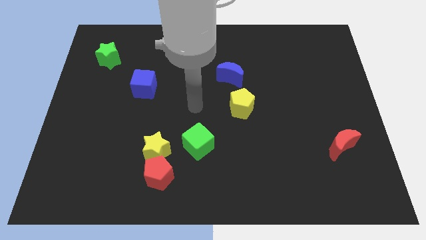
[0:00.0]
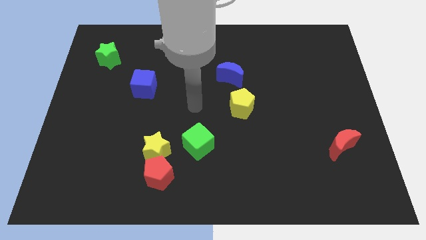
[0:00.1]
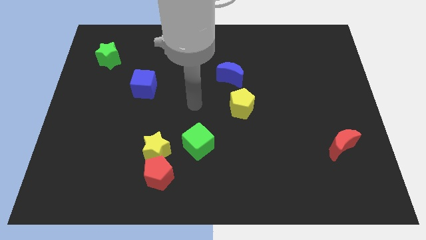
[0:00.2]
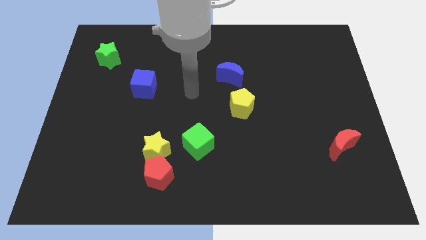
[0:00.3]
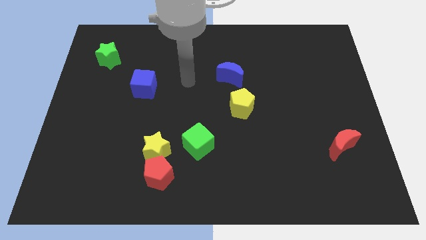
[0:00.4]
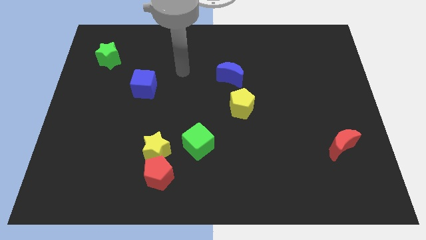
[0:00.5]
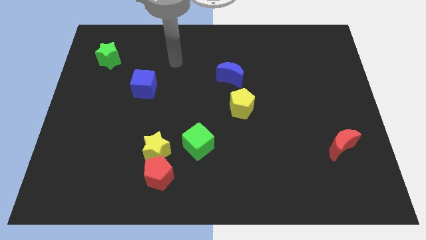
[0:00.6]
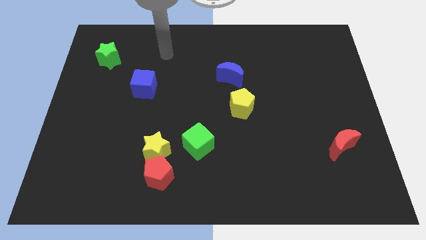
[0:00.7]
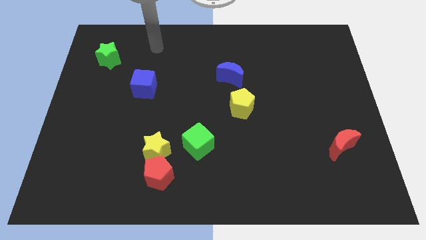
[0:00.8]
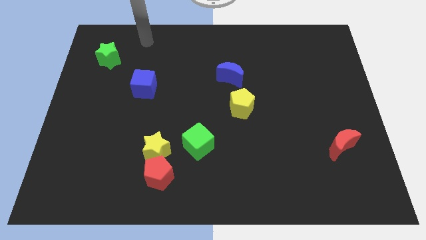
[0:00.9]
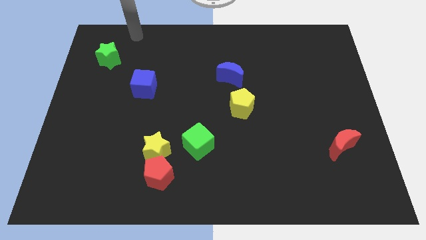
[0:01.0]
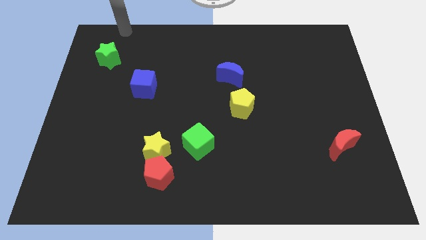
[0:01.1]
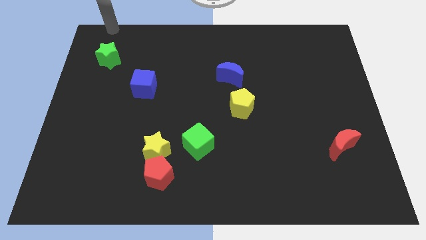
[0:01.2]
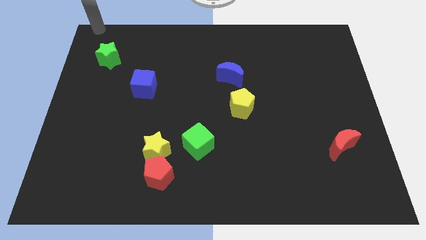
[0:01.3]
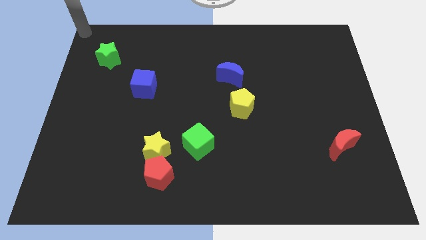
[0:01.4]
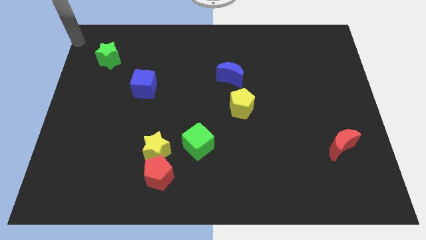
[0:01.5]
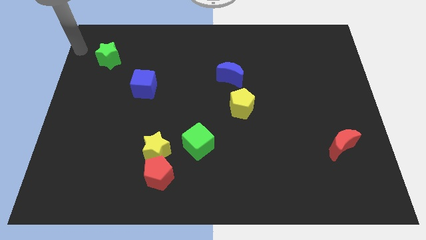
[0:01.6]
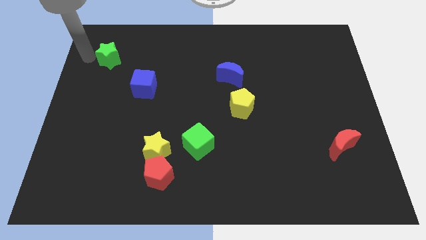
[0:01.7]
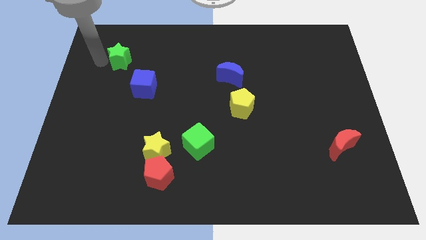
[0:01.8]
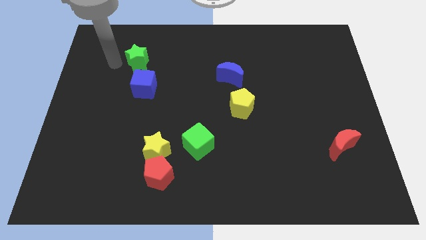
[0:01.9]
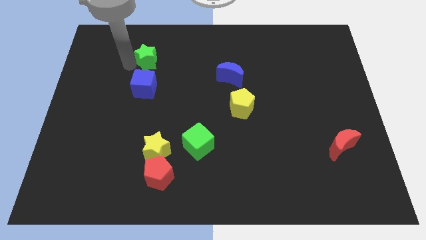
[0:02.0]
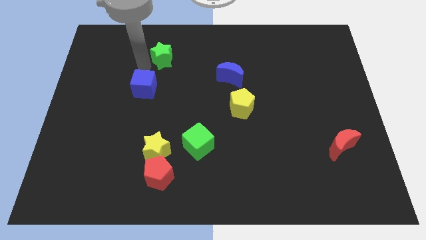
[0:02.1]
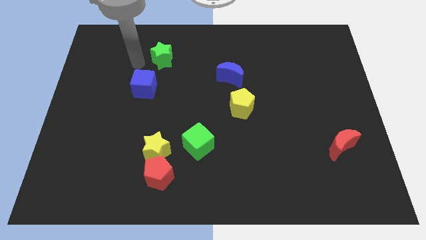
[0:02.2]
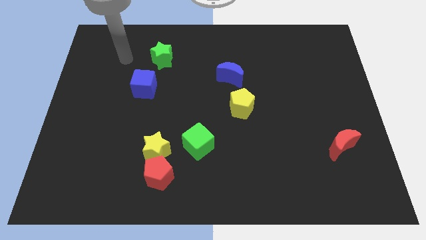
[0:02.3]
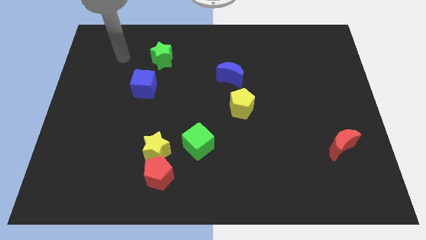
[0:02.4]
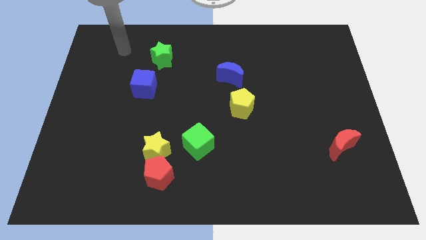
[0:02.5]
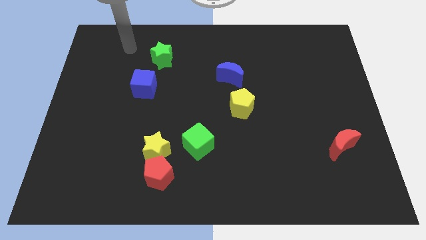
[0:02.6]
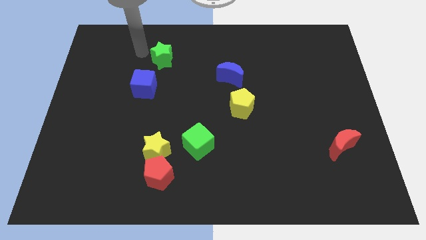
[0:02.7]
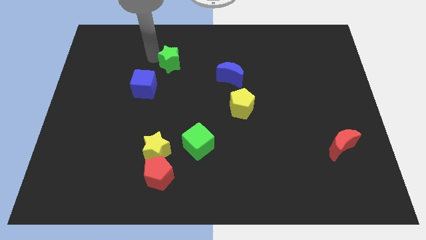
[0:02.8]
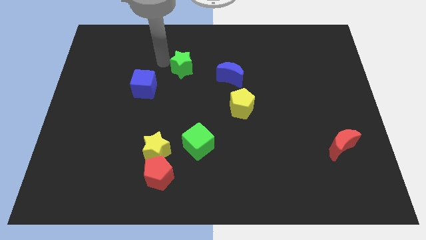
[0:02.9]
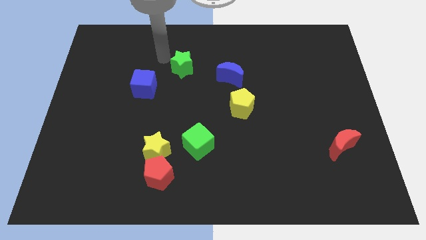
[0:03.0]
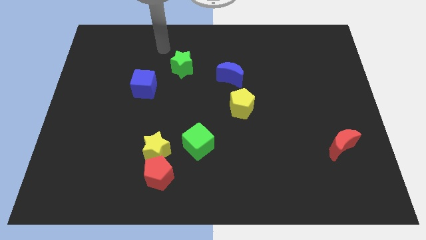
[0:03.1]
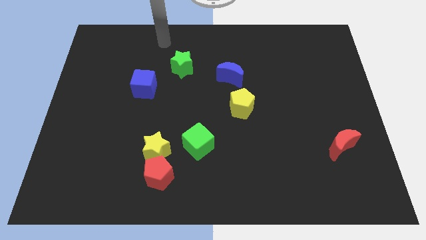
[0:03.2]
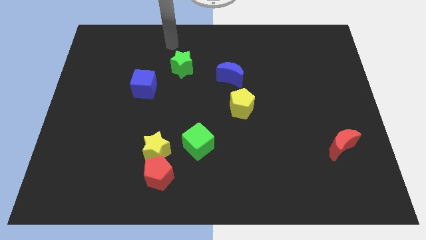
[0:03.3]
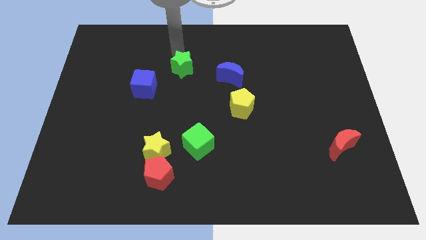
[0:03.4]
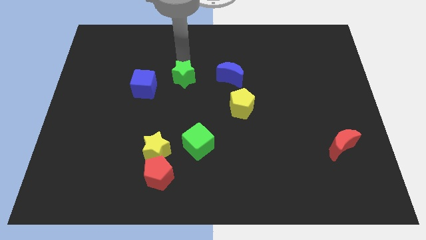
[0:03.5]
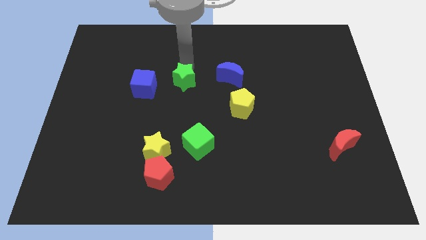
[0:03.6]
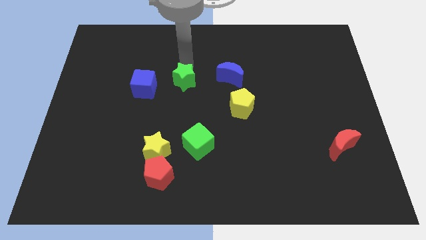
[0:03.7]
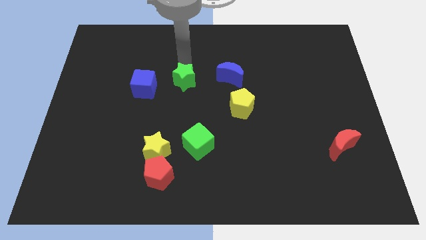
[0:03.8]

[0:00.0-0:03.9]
place the green star to the right of the blue cube

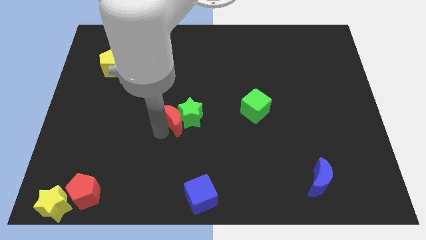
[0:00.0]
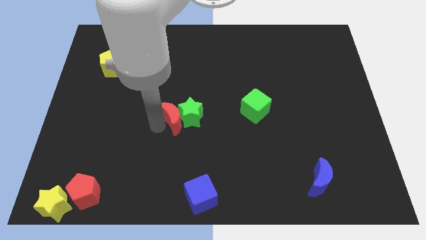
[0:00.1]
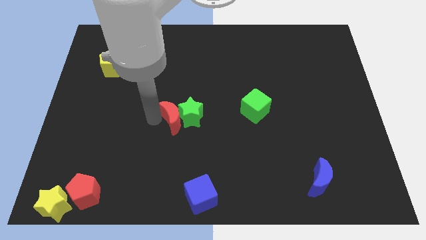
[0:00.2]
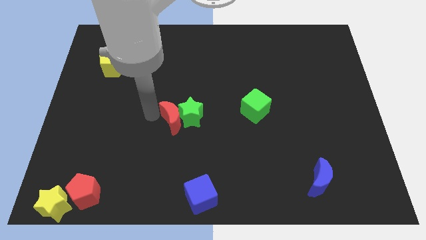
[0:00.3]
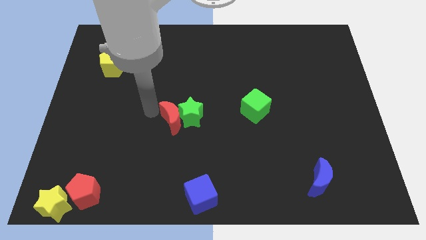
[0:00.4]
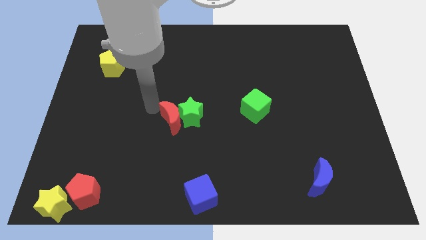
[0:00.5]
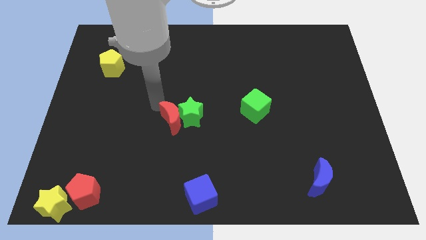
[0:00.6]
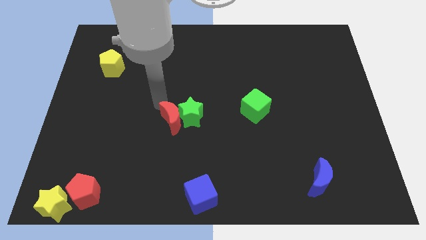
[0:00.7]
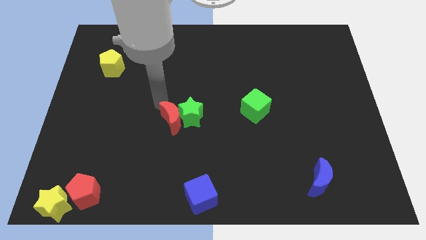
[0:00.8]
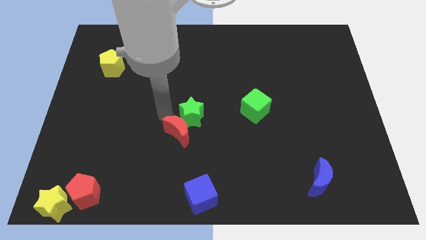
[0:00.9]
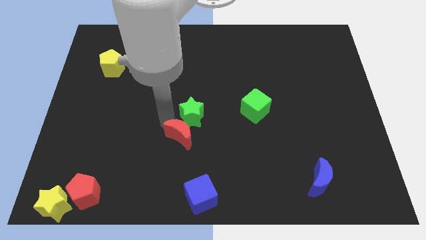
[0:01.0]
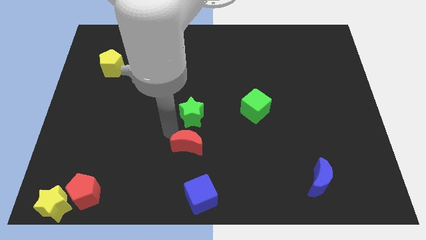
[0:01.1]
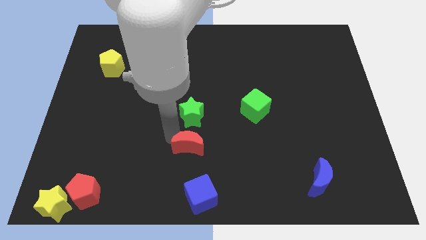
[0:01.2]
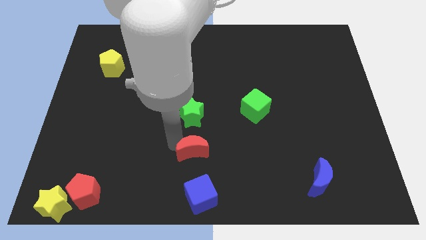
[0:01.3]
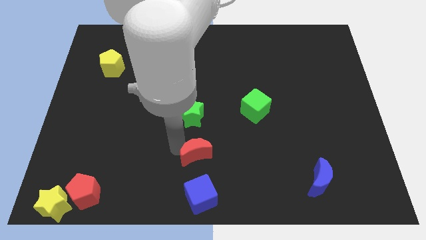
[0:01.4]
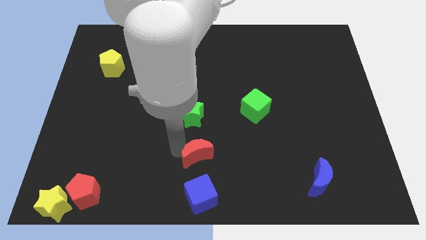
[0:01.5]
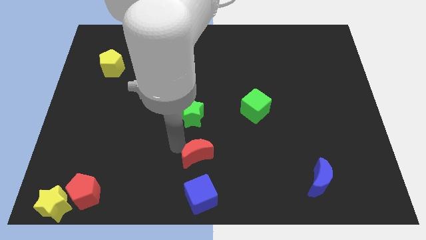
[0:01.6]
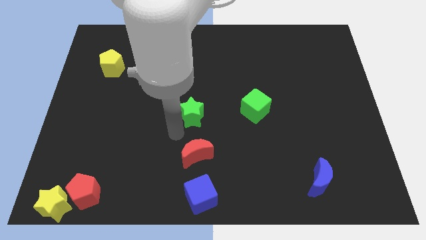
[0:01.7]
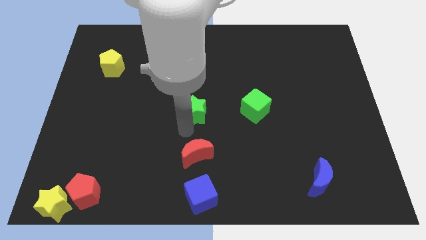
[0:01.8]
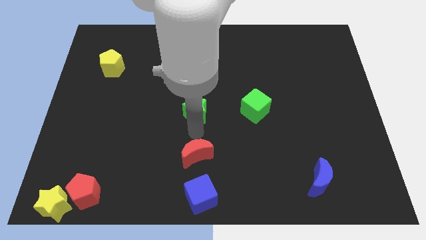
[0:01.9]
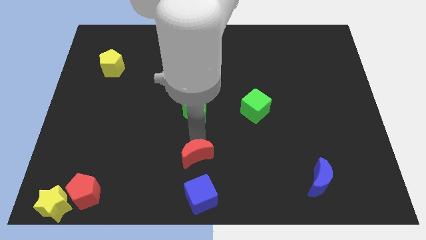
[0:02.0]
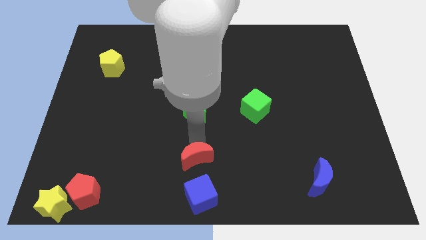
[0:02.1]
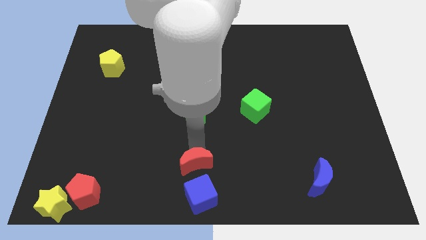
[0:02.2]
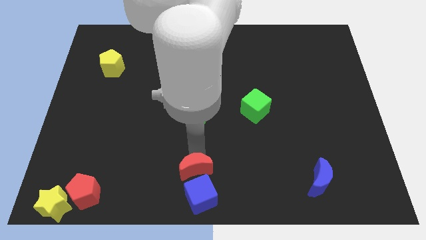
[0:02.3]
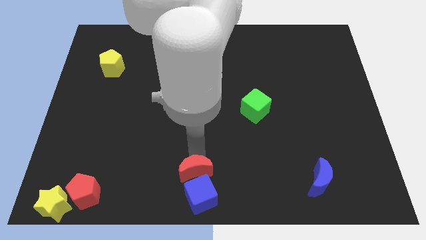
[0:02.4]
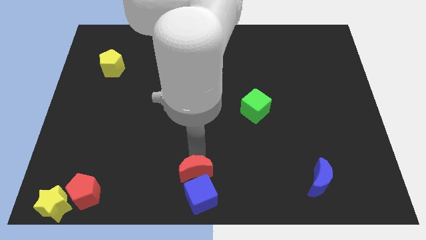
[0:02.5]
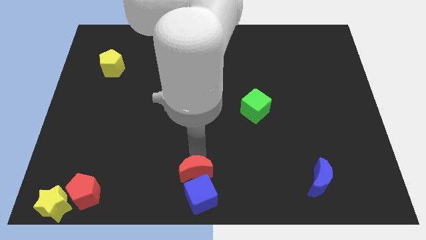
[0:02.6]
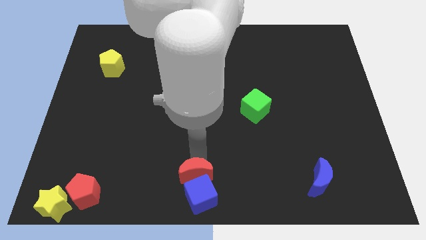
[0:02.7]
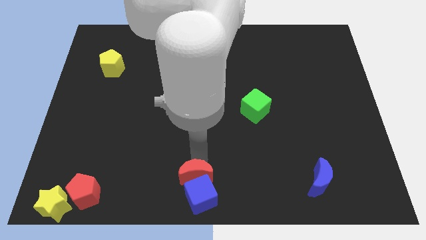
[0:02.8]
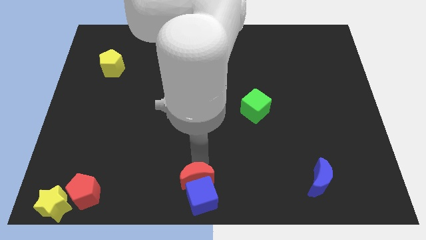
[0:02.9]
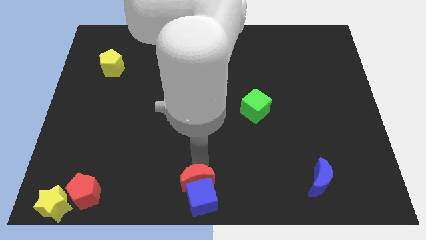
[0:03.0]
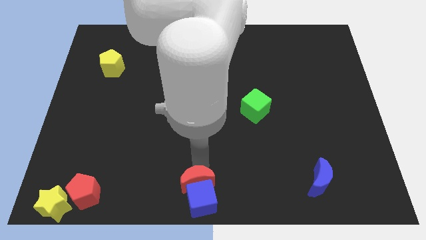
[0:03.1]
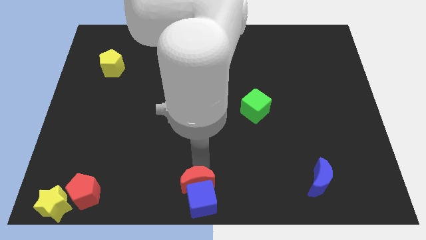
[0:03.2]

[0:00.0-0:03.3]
move the red crescent to the top of the blue cube

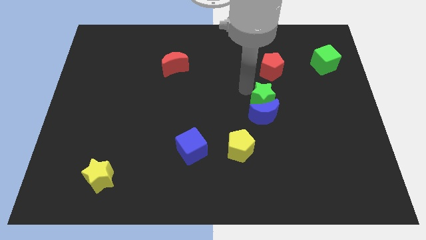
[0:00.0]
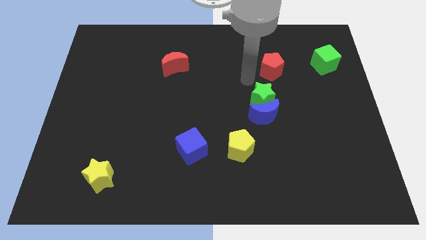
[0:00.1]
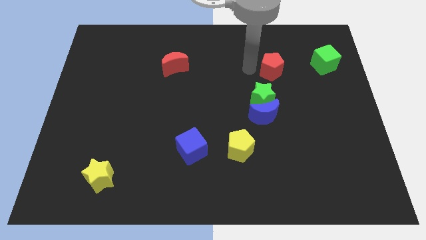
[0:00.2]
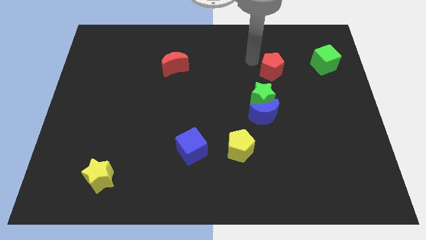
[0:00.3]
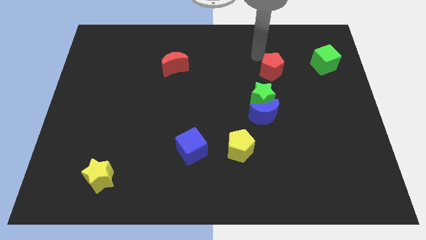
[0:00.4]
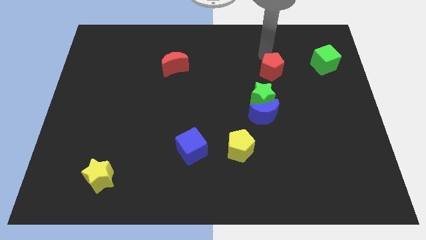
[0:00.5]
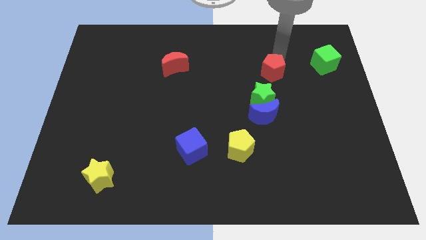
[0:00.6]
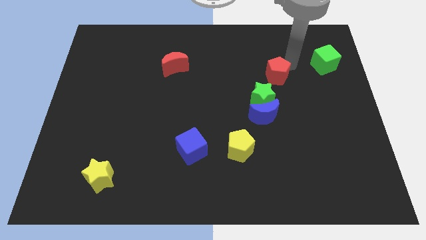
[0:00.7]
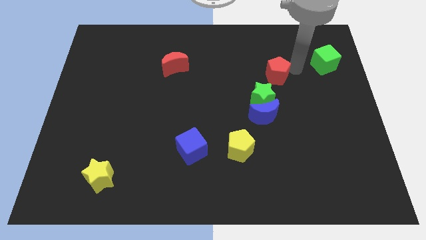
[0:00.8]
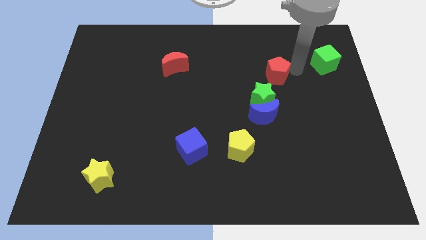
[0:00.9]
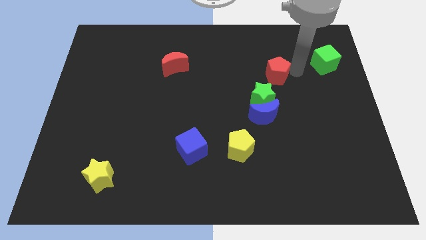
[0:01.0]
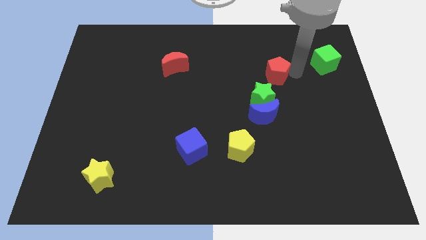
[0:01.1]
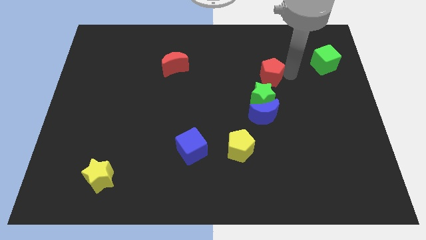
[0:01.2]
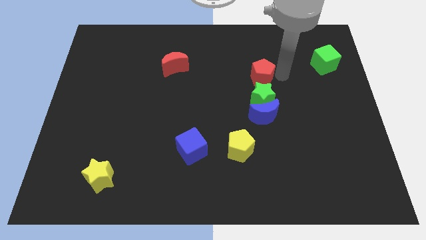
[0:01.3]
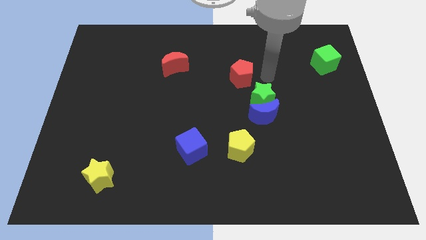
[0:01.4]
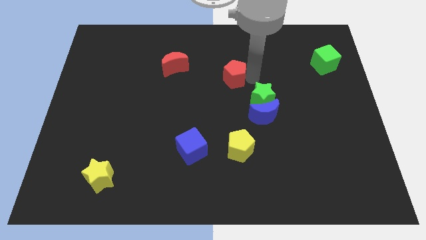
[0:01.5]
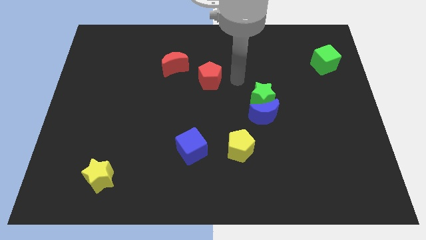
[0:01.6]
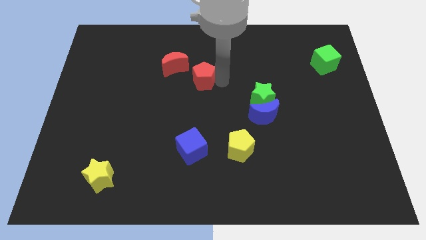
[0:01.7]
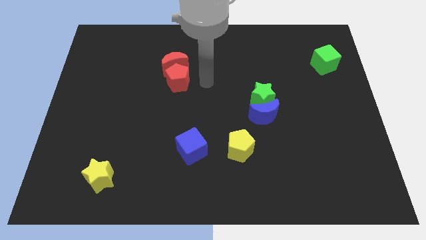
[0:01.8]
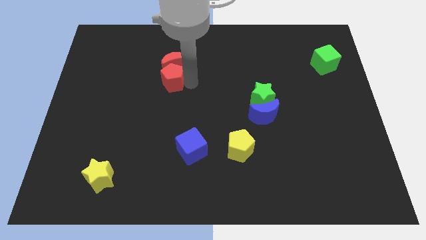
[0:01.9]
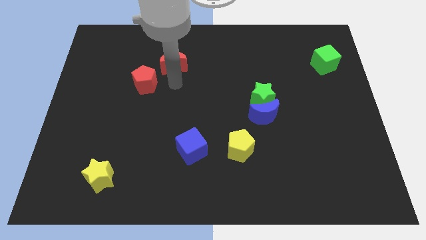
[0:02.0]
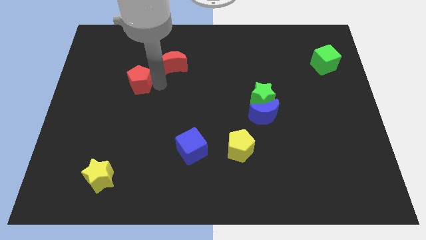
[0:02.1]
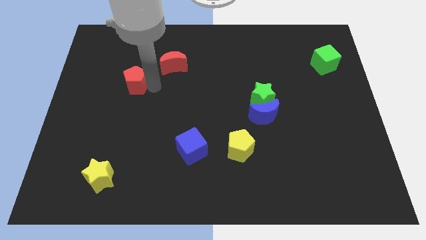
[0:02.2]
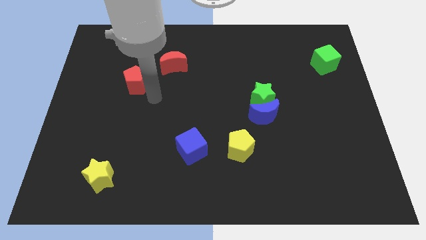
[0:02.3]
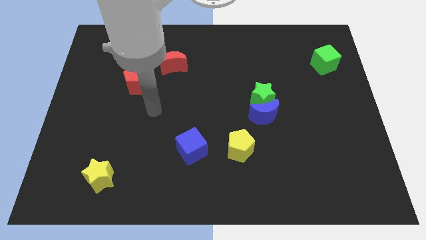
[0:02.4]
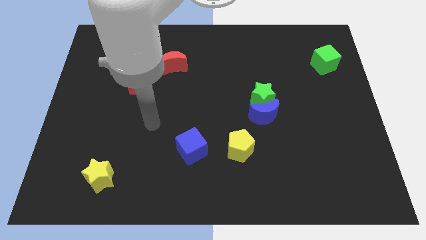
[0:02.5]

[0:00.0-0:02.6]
put the red pentagon at the bottom left side of red moon
